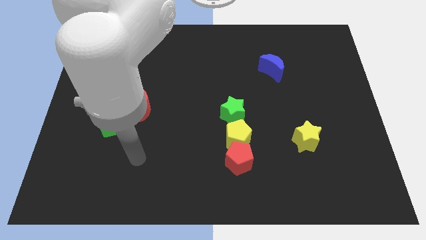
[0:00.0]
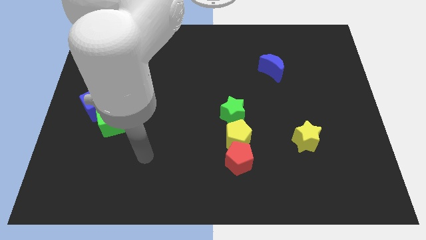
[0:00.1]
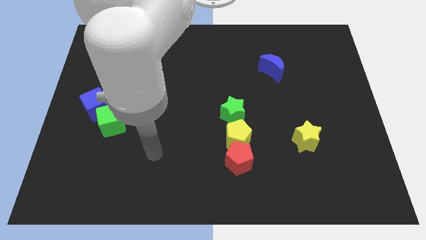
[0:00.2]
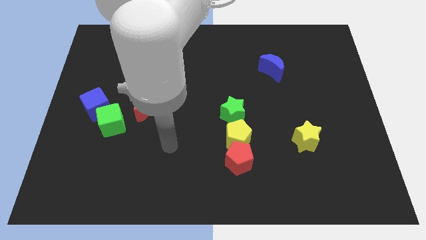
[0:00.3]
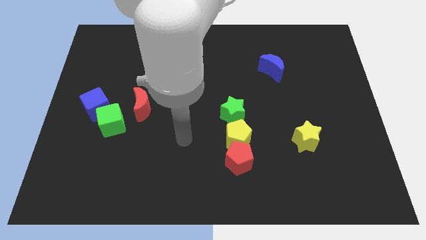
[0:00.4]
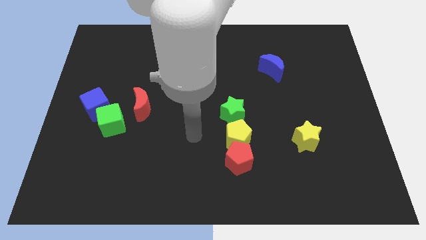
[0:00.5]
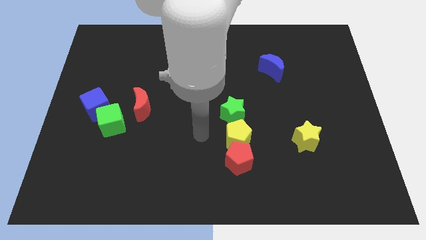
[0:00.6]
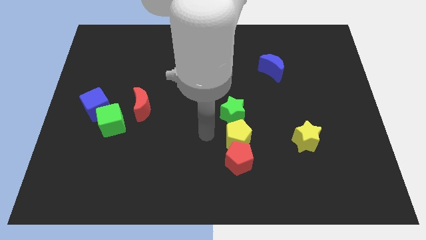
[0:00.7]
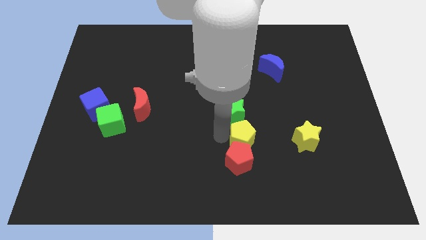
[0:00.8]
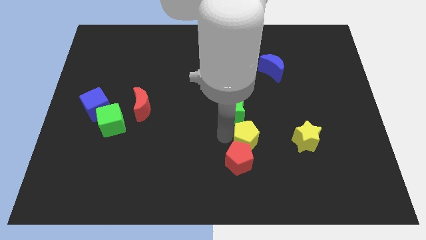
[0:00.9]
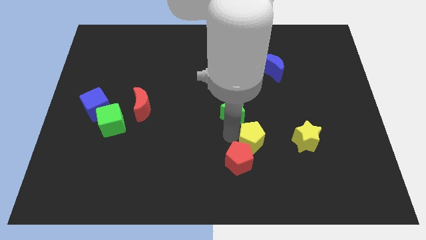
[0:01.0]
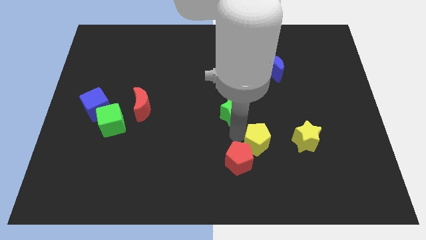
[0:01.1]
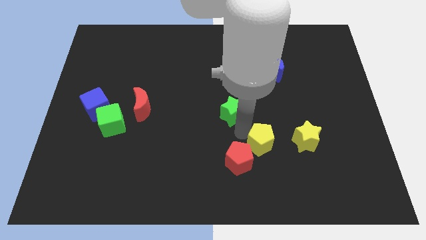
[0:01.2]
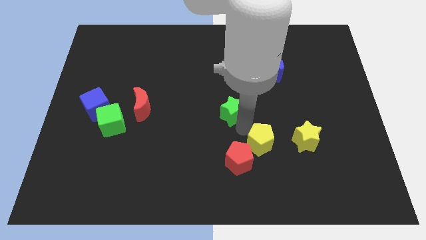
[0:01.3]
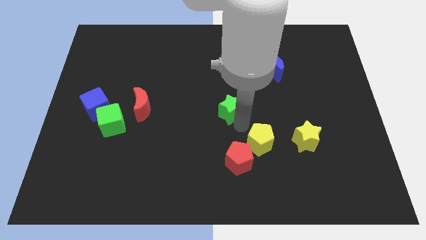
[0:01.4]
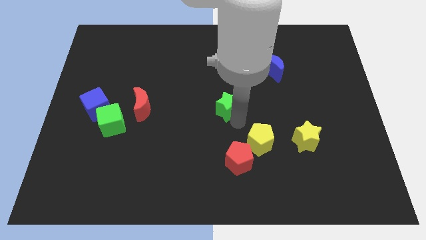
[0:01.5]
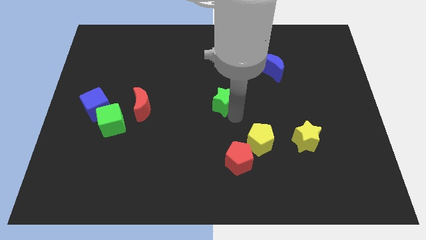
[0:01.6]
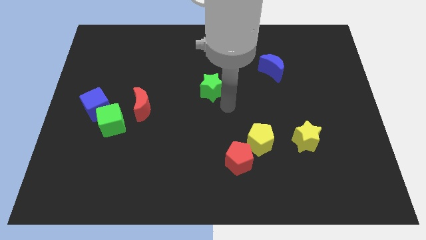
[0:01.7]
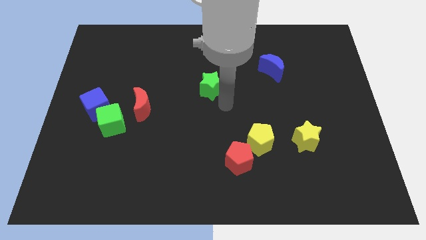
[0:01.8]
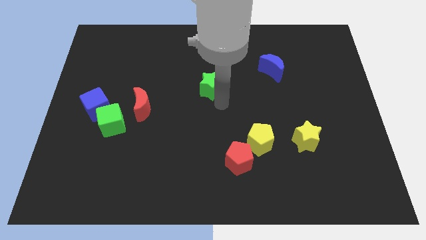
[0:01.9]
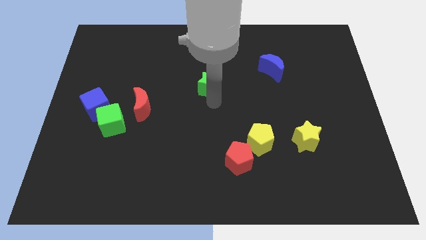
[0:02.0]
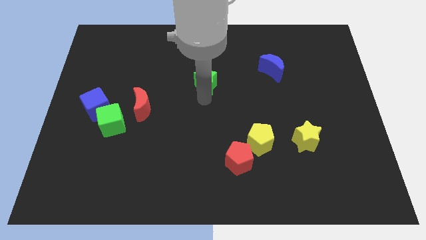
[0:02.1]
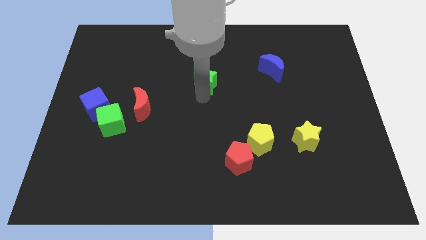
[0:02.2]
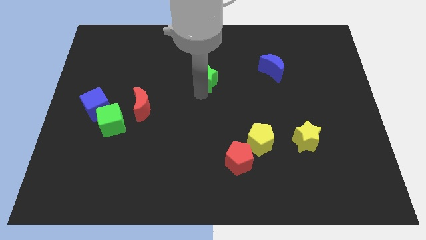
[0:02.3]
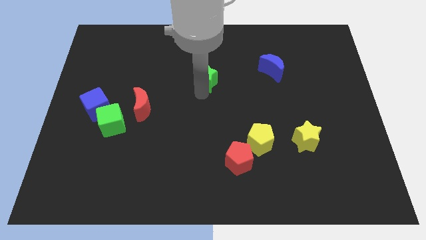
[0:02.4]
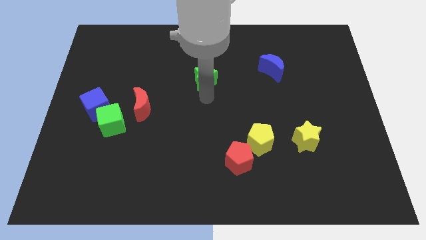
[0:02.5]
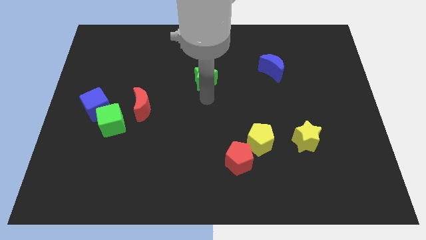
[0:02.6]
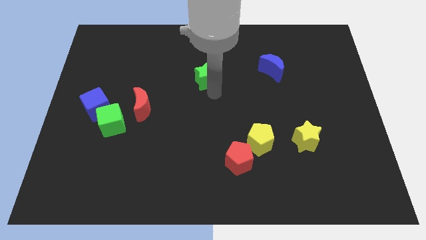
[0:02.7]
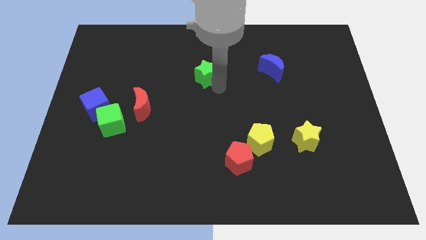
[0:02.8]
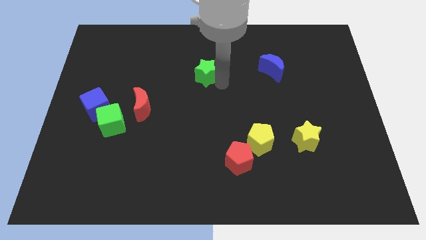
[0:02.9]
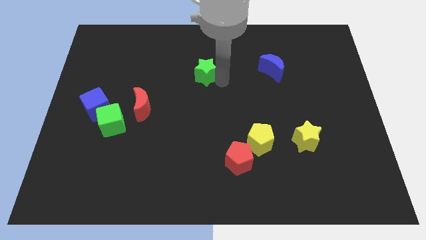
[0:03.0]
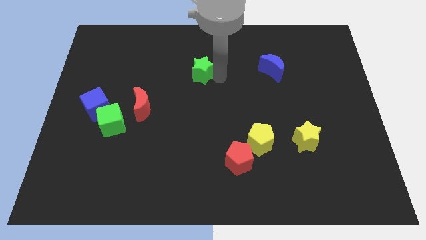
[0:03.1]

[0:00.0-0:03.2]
separate the green star from the yellow pentagon

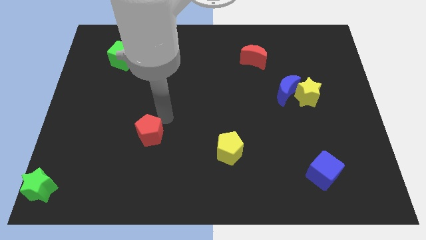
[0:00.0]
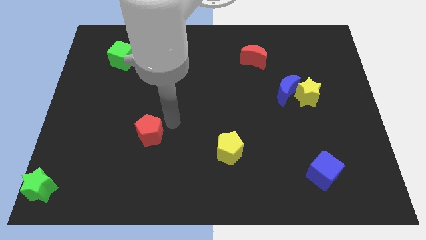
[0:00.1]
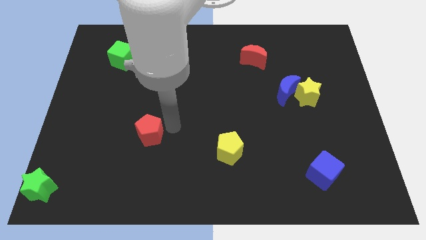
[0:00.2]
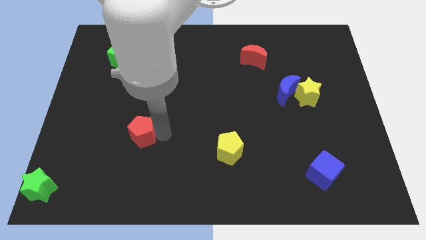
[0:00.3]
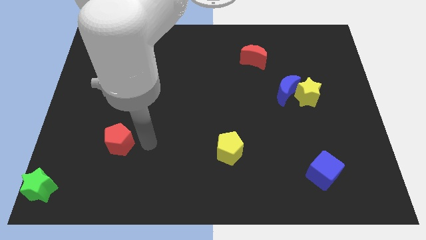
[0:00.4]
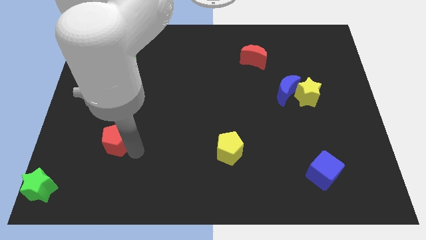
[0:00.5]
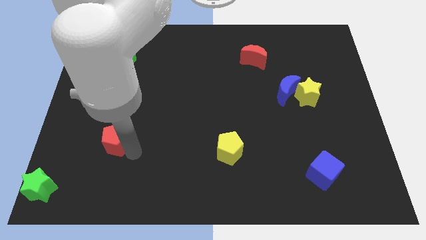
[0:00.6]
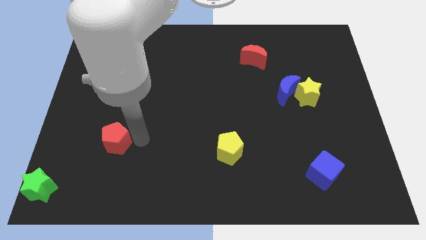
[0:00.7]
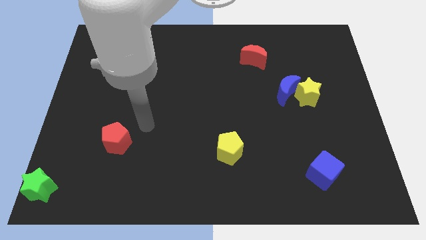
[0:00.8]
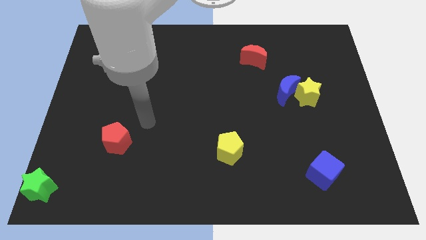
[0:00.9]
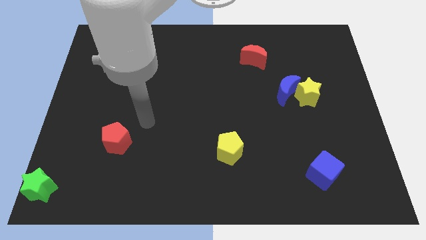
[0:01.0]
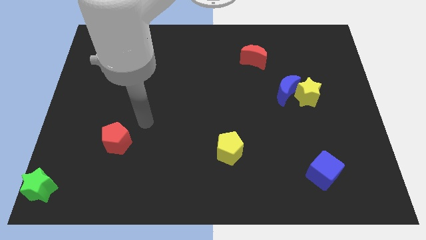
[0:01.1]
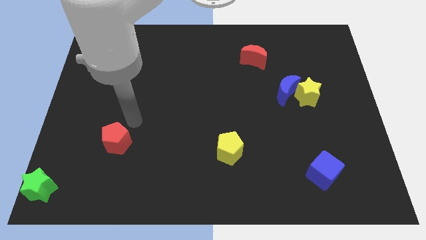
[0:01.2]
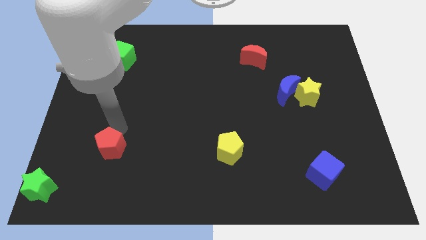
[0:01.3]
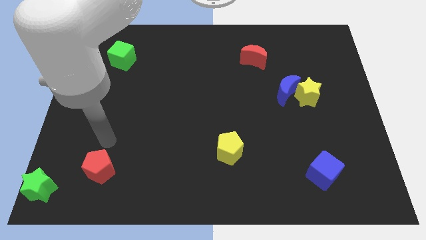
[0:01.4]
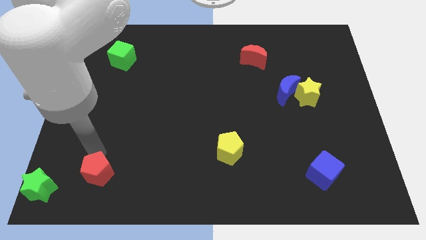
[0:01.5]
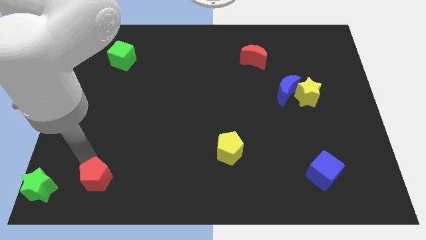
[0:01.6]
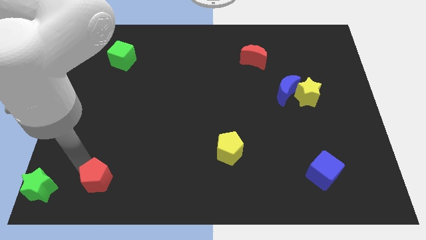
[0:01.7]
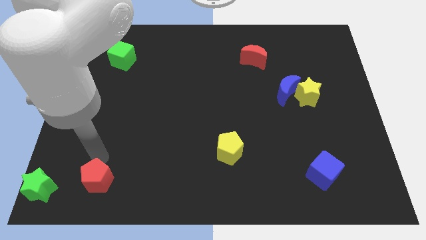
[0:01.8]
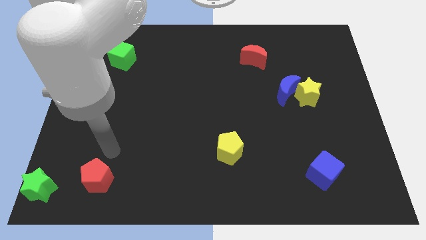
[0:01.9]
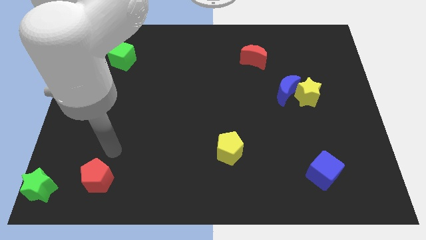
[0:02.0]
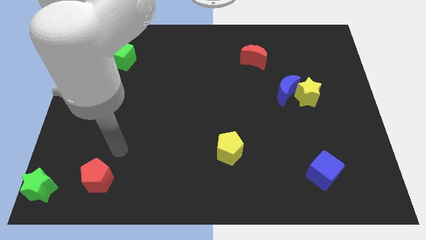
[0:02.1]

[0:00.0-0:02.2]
place the red pentagon at right side of the green star

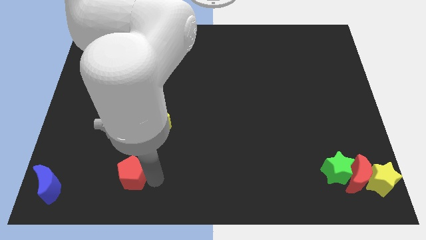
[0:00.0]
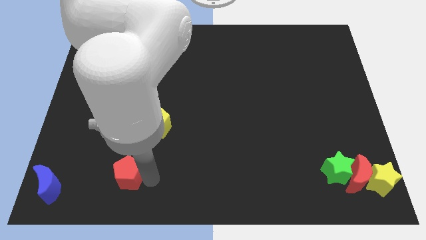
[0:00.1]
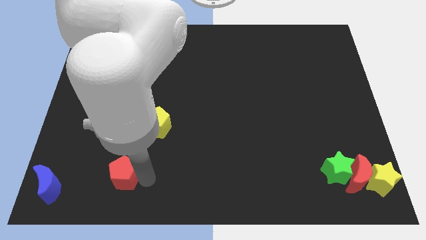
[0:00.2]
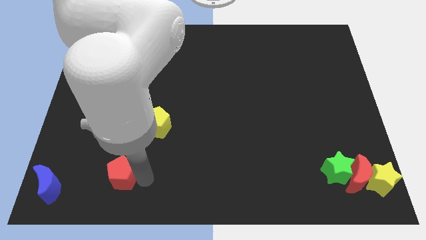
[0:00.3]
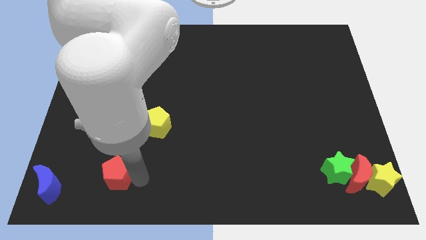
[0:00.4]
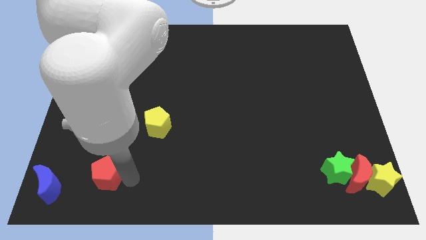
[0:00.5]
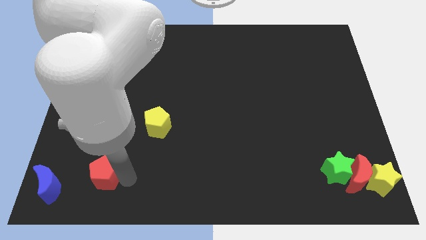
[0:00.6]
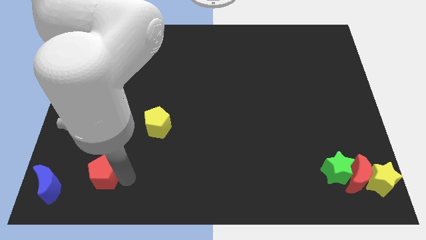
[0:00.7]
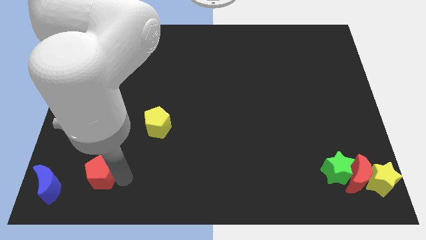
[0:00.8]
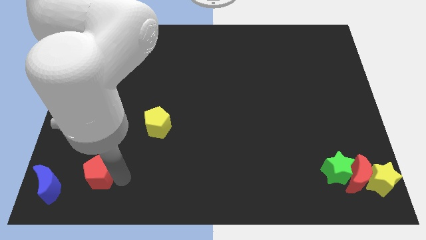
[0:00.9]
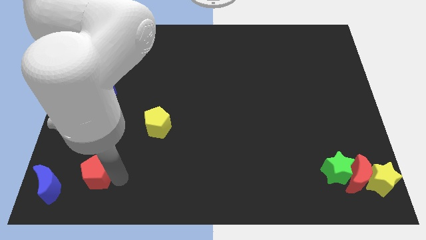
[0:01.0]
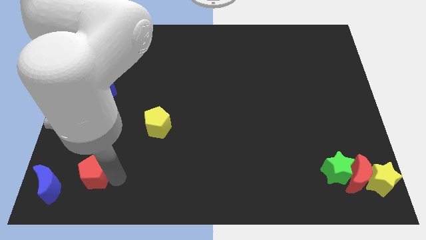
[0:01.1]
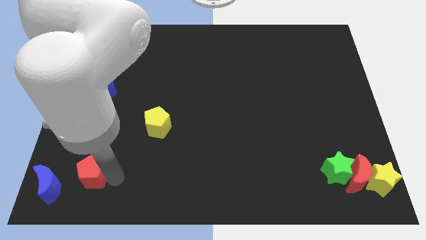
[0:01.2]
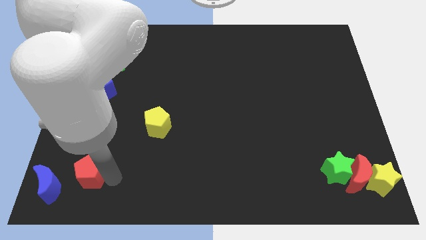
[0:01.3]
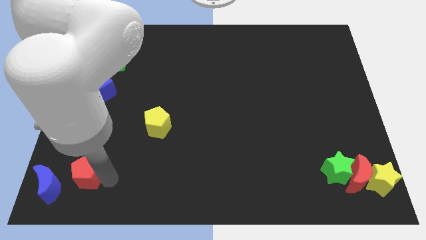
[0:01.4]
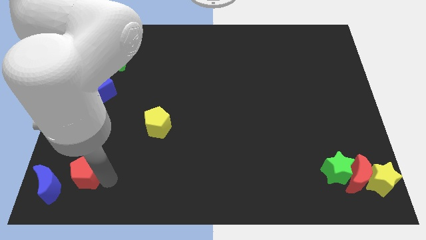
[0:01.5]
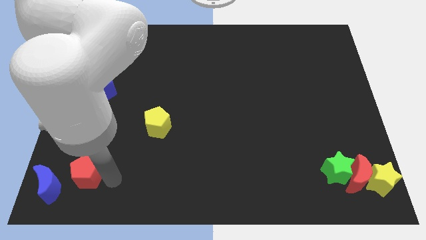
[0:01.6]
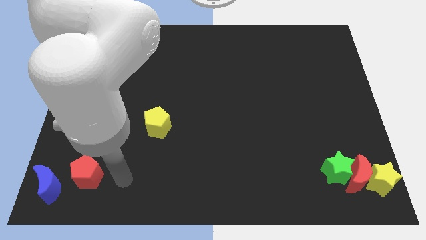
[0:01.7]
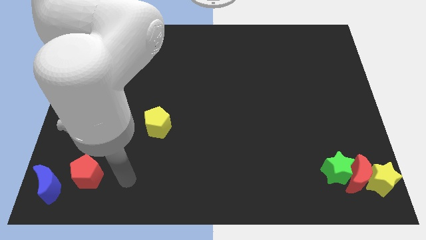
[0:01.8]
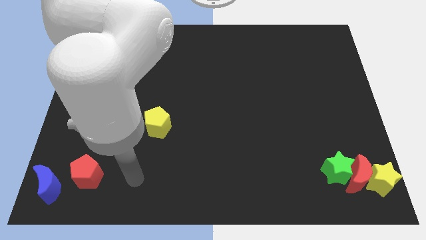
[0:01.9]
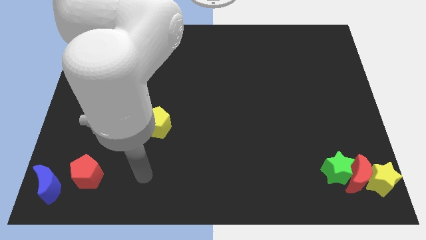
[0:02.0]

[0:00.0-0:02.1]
place red pentagon beside blue crescent

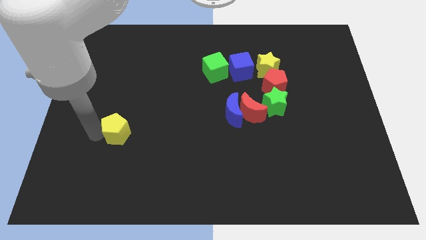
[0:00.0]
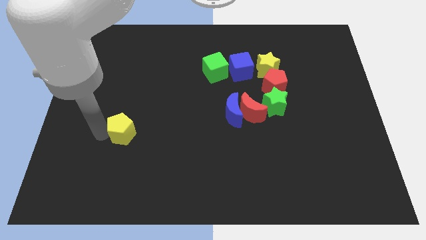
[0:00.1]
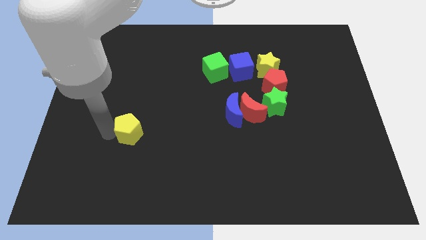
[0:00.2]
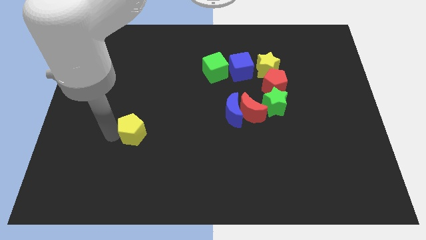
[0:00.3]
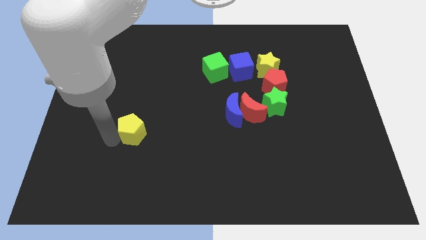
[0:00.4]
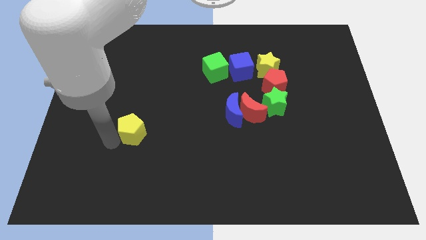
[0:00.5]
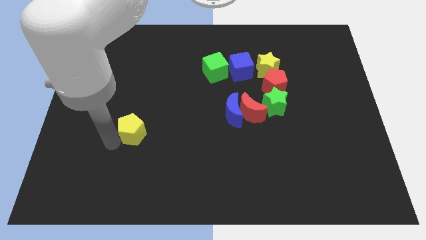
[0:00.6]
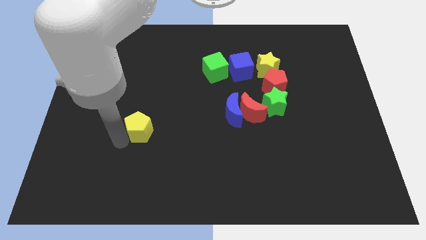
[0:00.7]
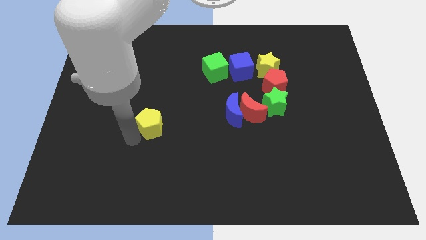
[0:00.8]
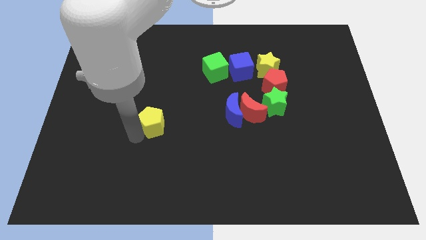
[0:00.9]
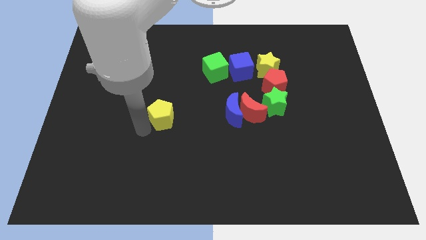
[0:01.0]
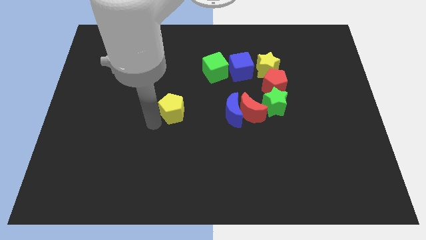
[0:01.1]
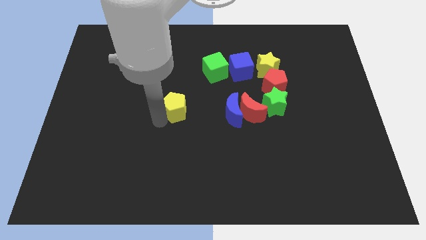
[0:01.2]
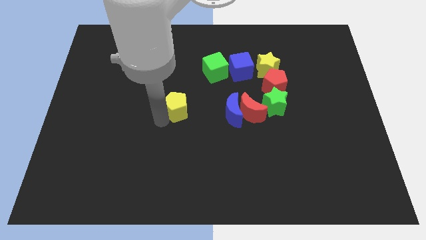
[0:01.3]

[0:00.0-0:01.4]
drag the yellow pentagon towards the group of blocks
